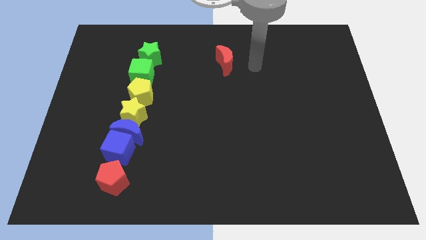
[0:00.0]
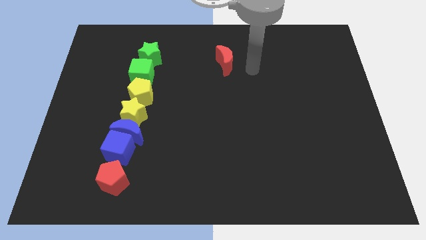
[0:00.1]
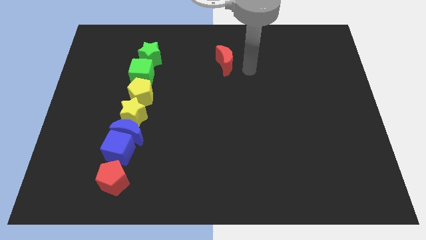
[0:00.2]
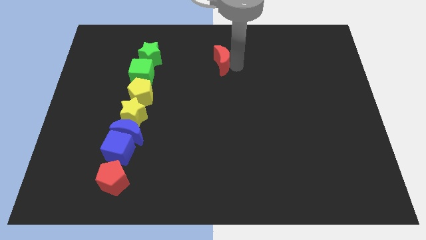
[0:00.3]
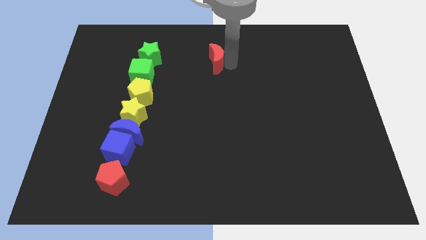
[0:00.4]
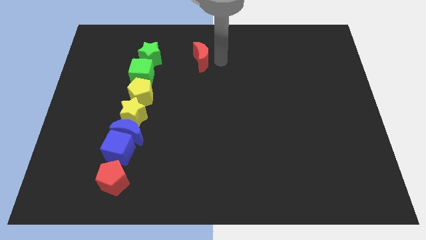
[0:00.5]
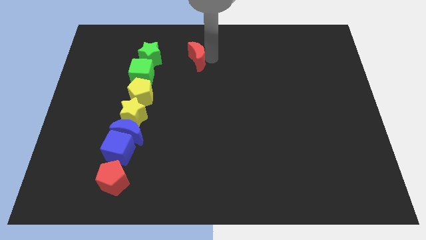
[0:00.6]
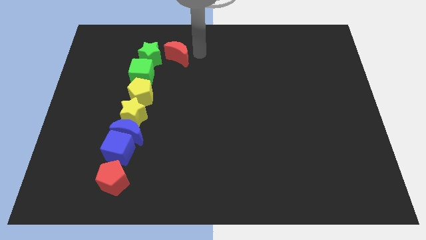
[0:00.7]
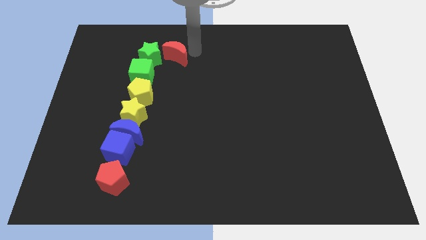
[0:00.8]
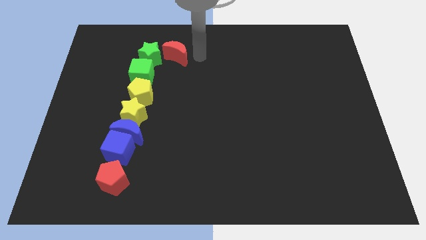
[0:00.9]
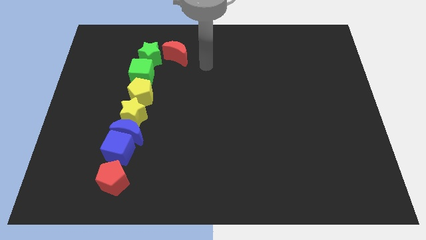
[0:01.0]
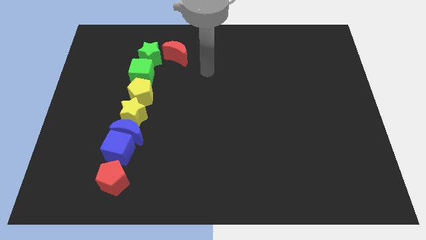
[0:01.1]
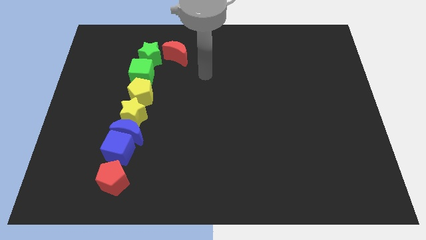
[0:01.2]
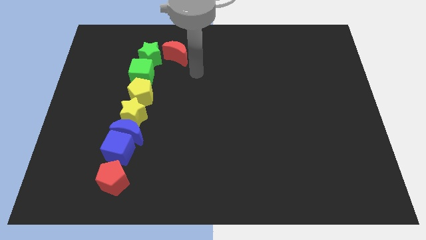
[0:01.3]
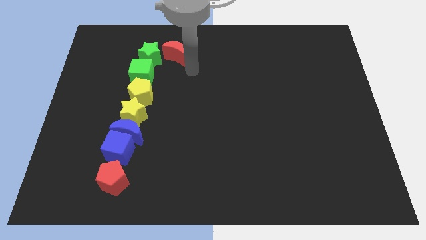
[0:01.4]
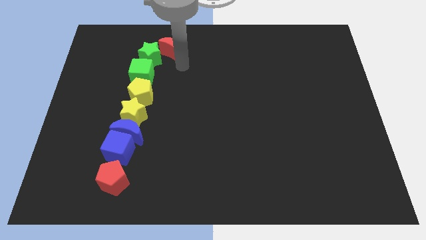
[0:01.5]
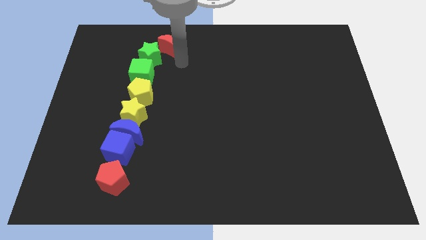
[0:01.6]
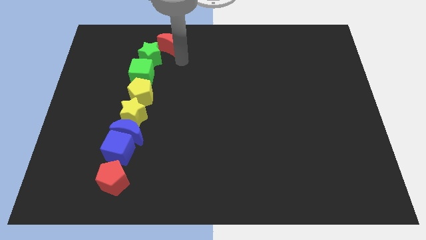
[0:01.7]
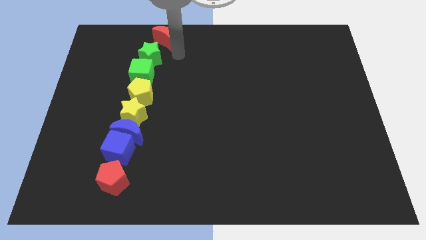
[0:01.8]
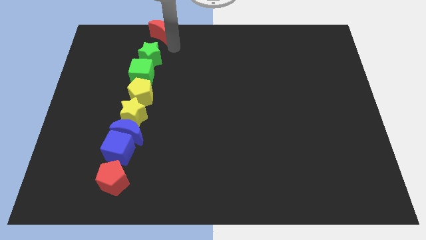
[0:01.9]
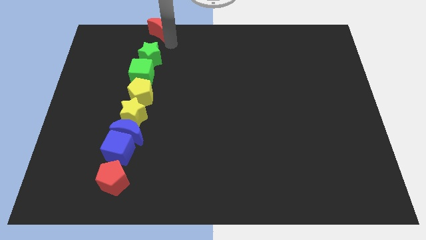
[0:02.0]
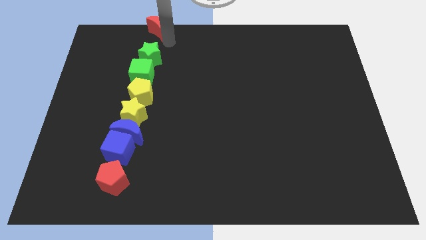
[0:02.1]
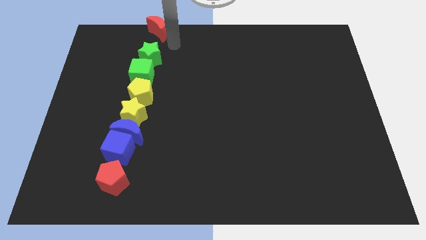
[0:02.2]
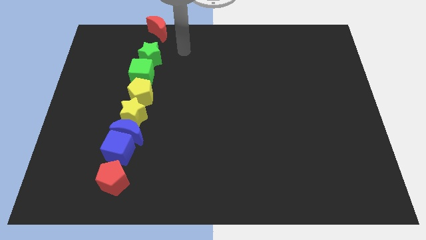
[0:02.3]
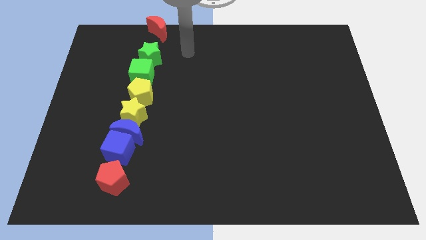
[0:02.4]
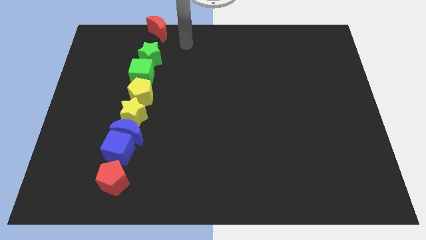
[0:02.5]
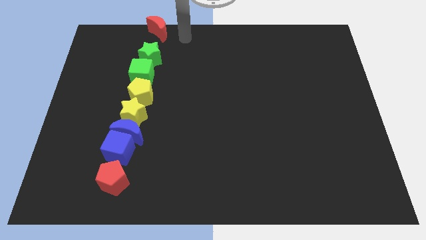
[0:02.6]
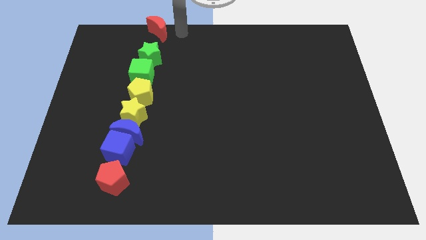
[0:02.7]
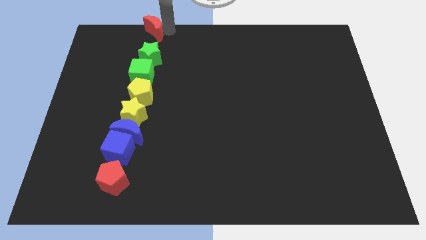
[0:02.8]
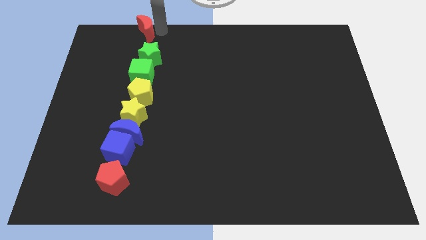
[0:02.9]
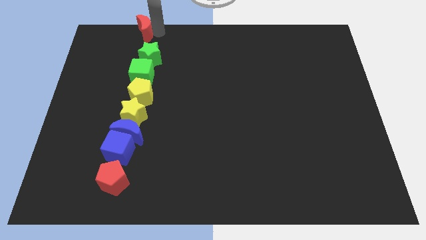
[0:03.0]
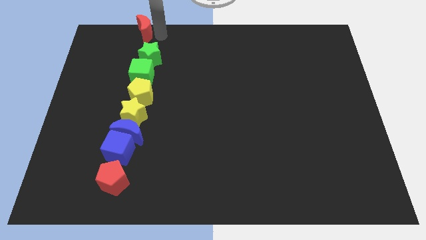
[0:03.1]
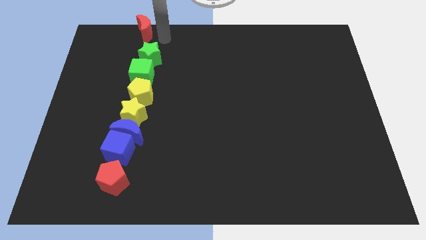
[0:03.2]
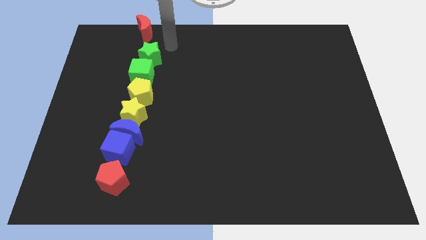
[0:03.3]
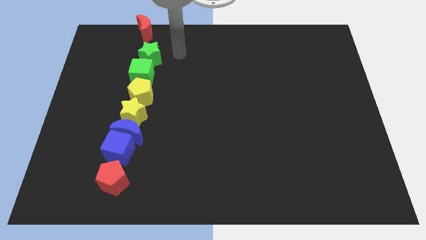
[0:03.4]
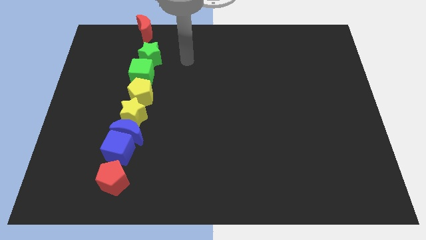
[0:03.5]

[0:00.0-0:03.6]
add the red moon in a vertical line at the top

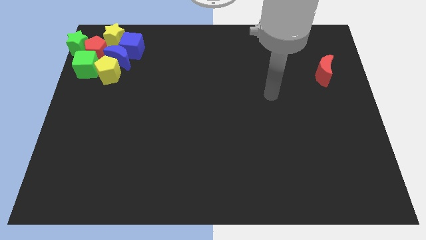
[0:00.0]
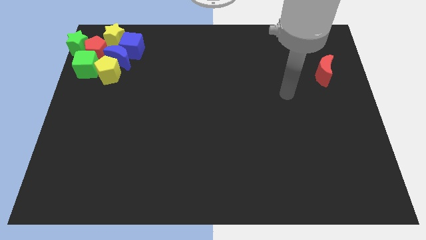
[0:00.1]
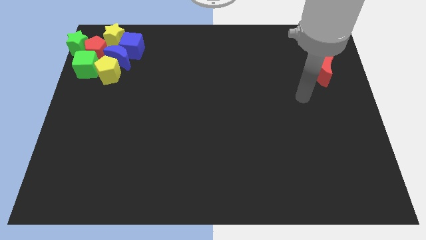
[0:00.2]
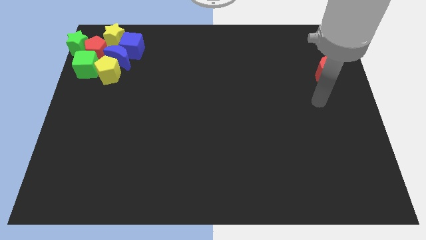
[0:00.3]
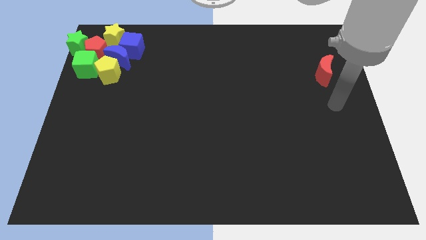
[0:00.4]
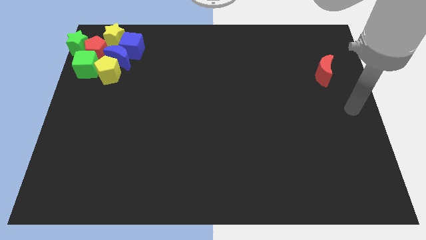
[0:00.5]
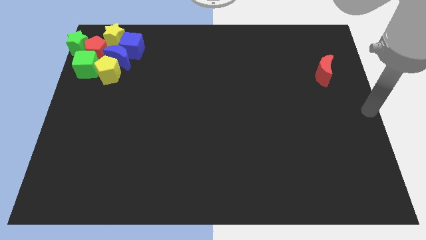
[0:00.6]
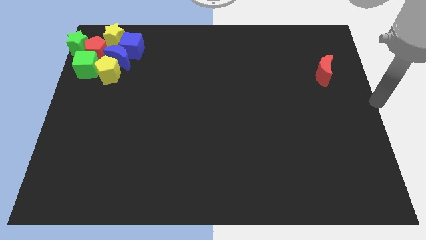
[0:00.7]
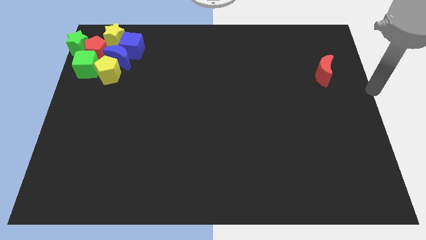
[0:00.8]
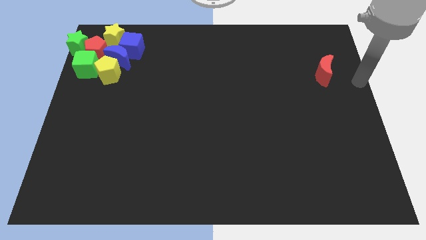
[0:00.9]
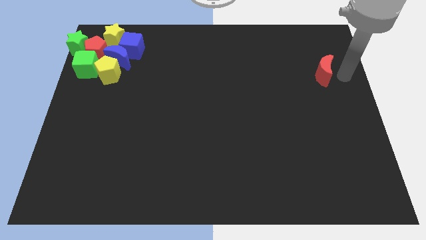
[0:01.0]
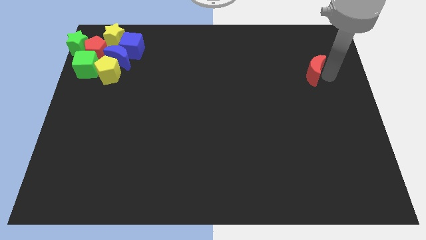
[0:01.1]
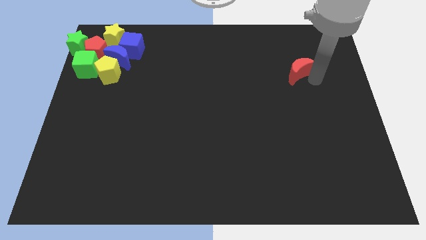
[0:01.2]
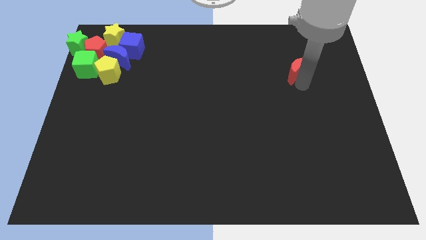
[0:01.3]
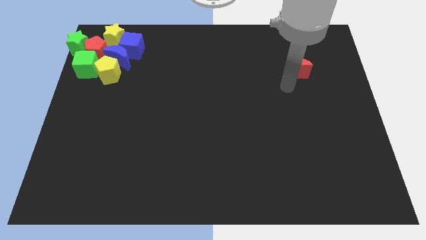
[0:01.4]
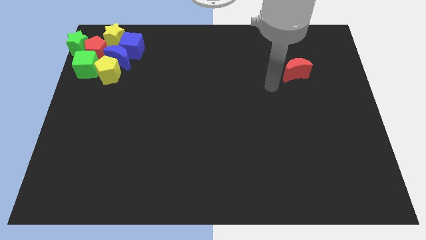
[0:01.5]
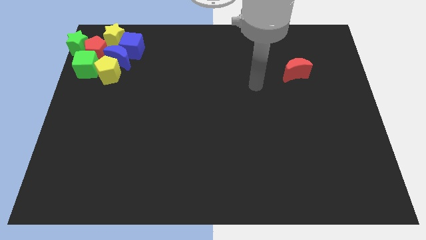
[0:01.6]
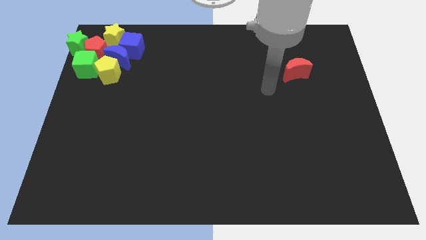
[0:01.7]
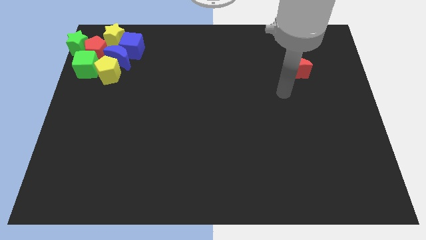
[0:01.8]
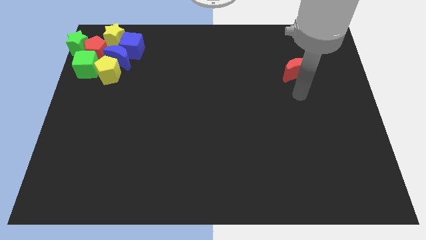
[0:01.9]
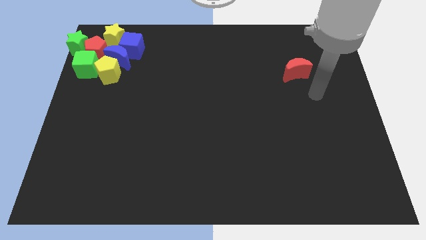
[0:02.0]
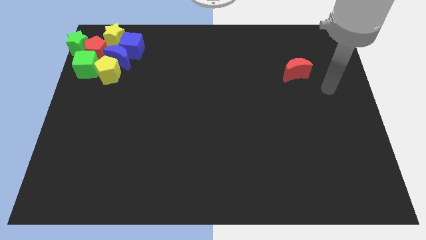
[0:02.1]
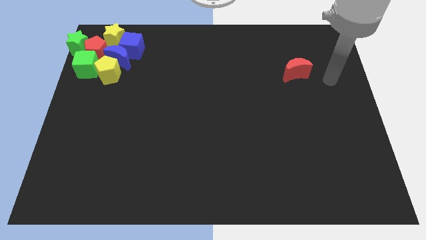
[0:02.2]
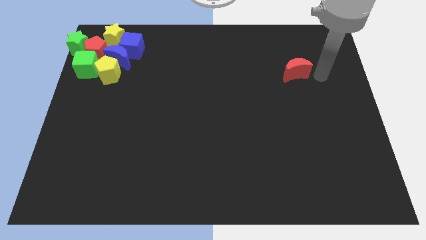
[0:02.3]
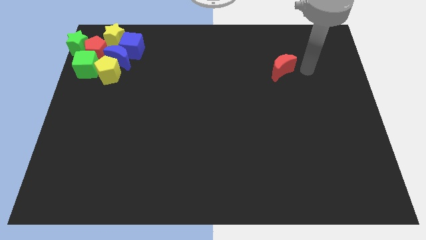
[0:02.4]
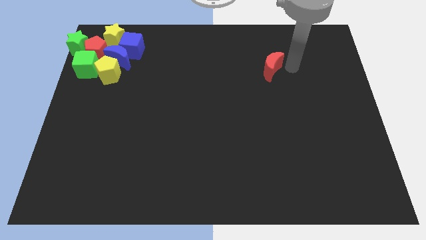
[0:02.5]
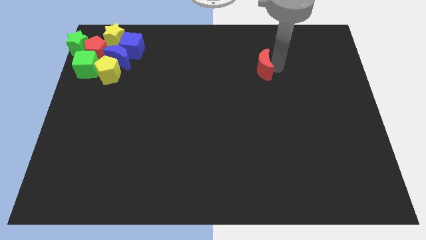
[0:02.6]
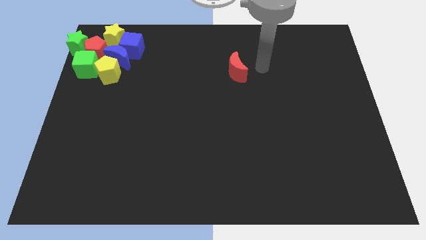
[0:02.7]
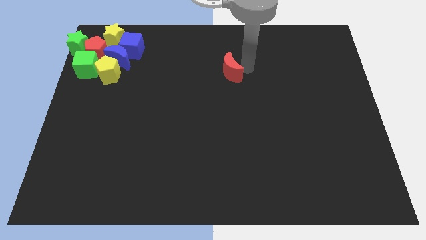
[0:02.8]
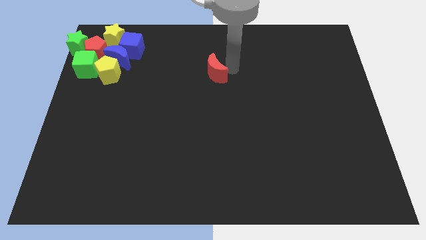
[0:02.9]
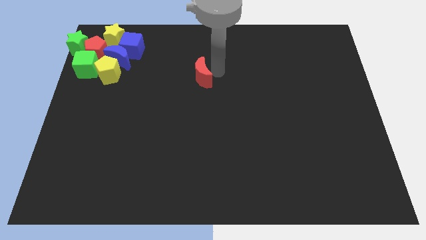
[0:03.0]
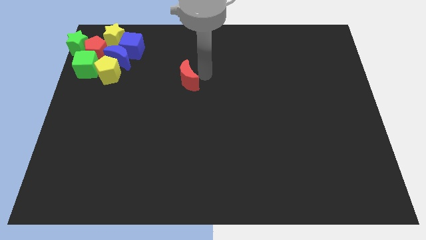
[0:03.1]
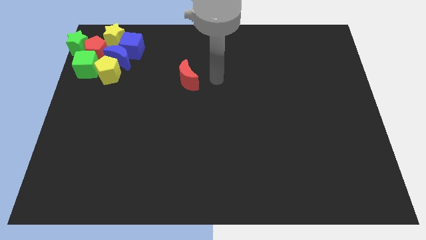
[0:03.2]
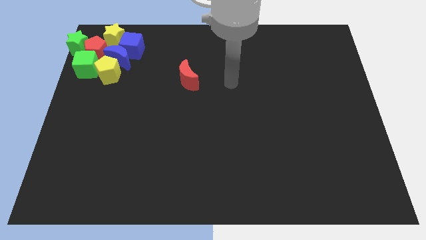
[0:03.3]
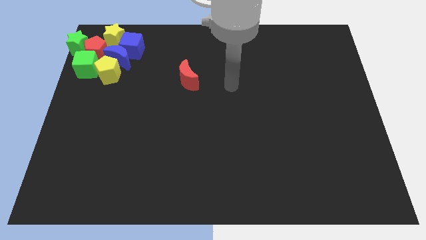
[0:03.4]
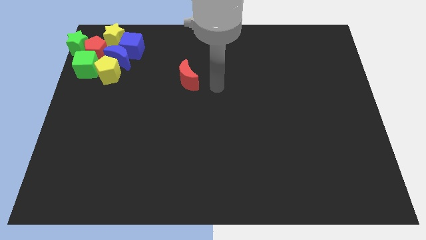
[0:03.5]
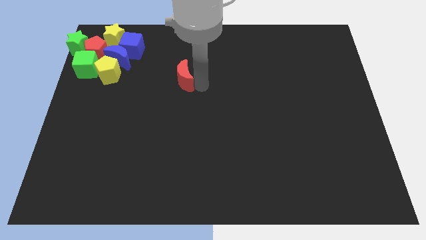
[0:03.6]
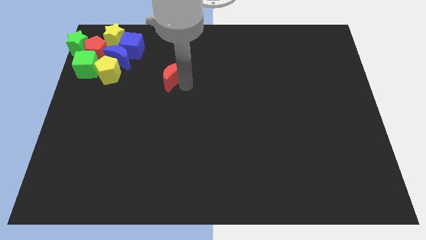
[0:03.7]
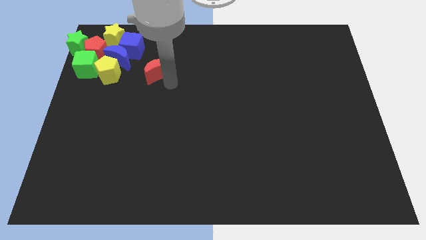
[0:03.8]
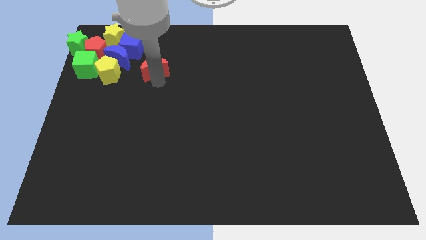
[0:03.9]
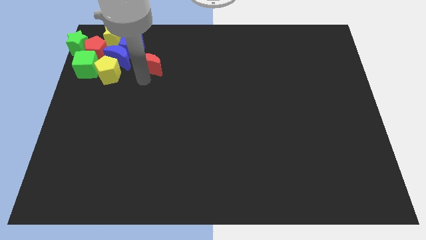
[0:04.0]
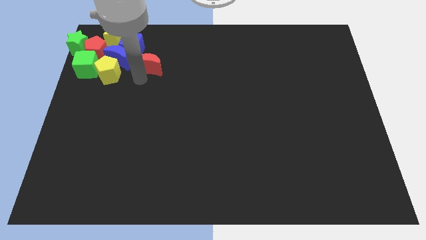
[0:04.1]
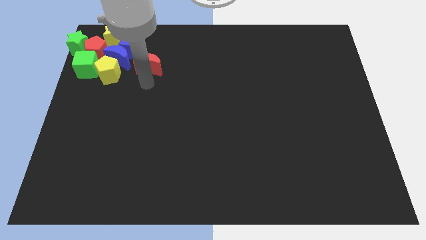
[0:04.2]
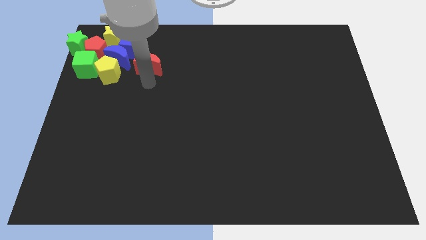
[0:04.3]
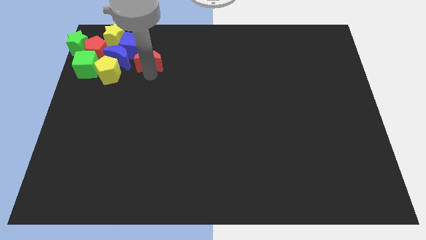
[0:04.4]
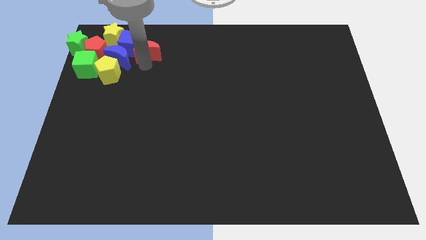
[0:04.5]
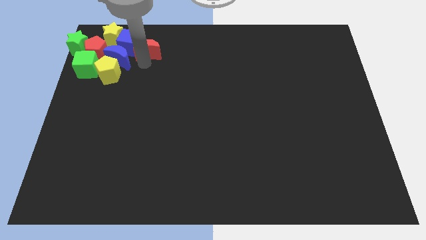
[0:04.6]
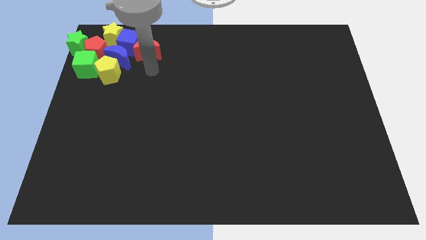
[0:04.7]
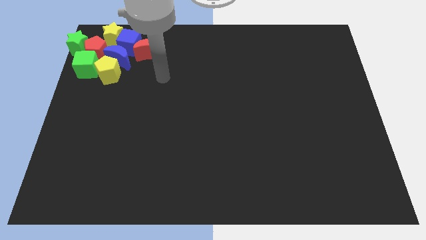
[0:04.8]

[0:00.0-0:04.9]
move all the blocks towards the top left of the board

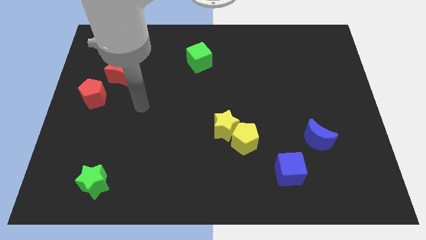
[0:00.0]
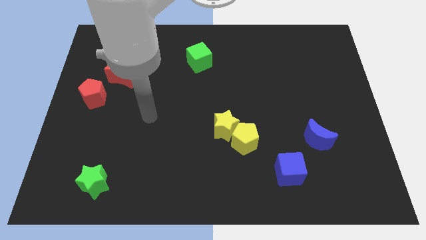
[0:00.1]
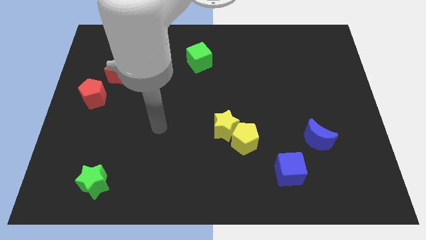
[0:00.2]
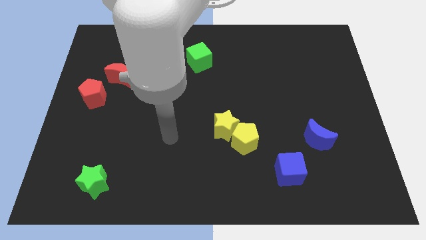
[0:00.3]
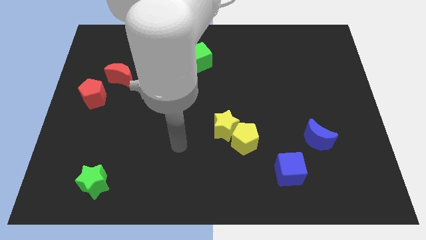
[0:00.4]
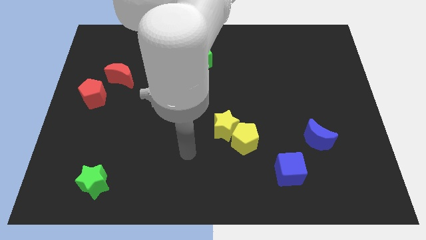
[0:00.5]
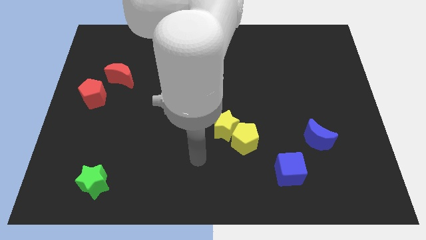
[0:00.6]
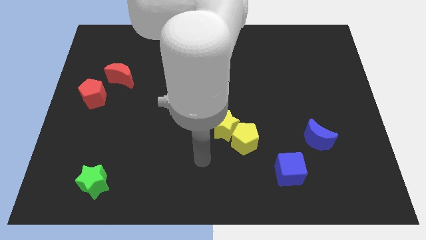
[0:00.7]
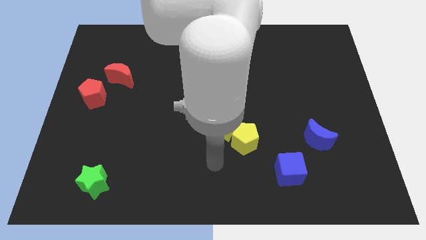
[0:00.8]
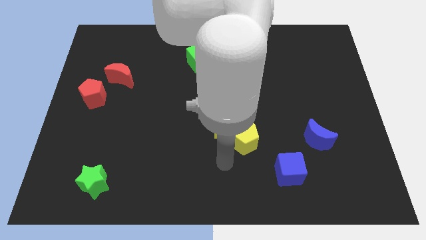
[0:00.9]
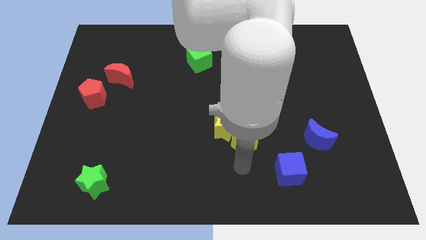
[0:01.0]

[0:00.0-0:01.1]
point your arm at the bottom side of the yellow pentagon
